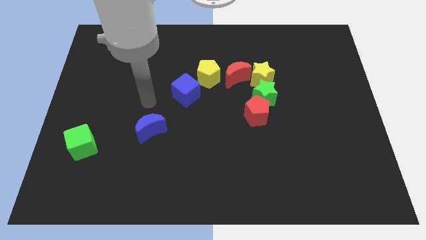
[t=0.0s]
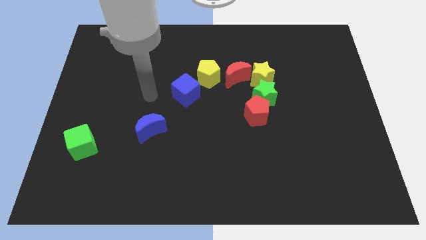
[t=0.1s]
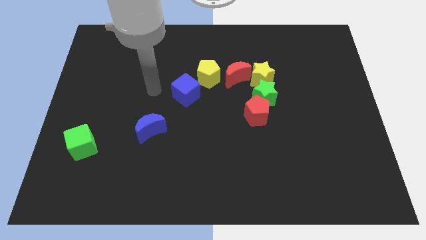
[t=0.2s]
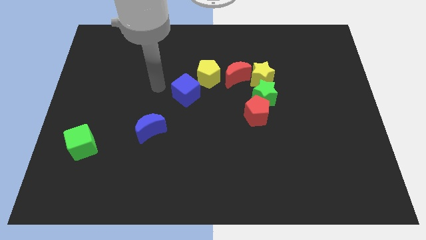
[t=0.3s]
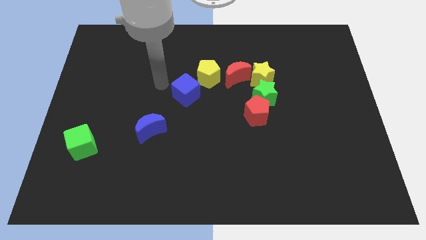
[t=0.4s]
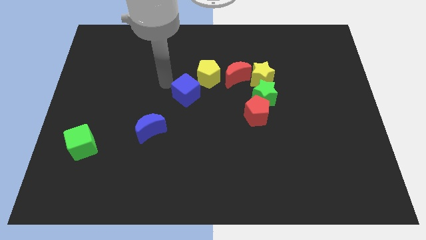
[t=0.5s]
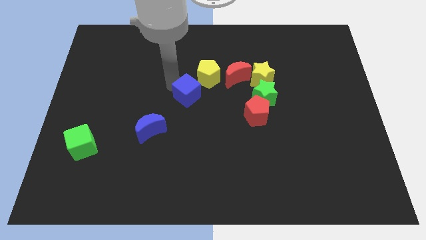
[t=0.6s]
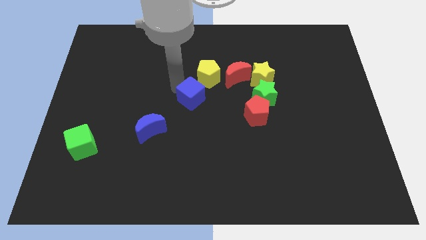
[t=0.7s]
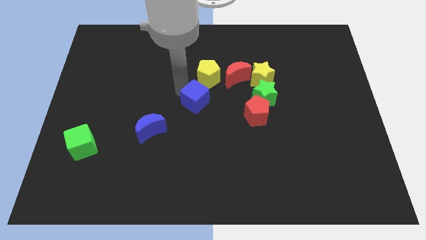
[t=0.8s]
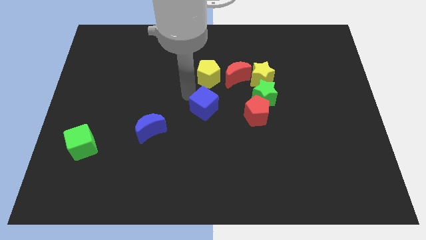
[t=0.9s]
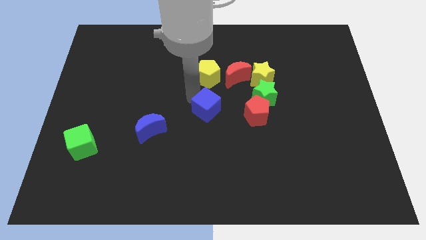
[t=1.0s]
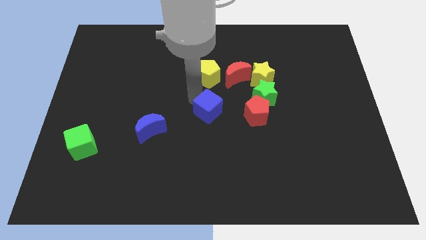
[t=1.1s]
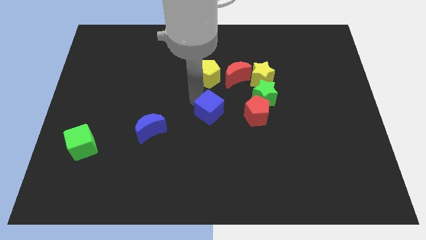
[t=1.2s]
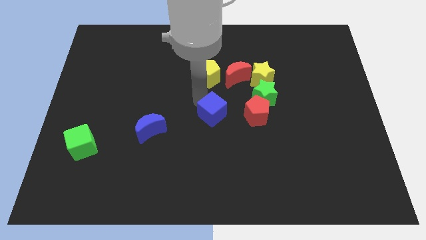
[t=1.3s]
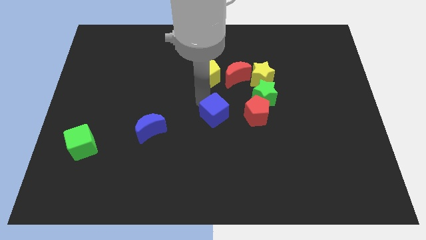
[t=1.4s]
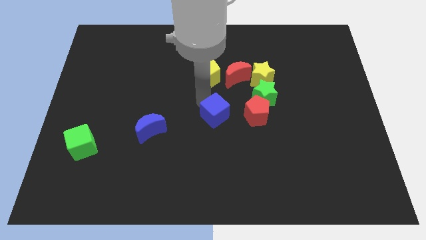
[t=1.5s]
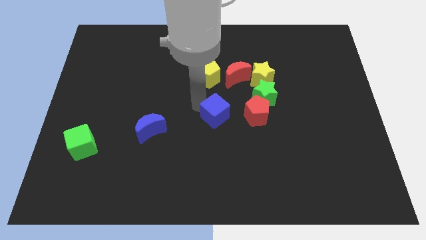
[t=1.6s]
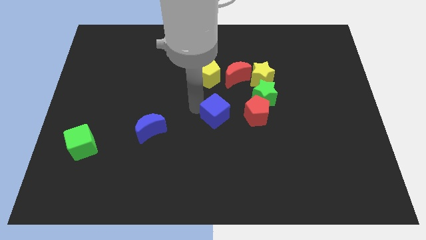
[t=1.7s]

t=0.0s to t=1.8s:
place the blue cube left to the red pentagon

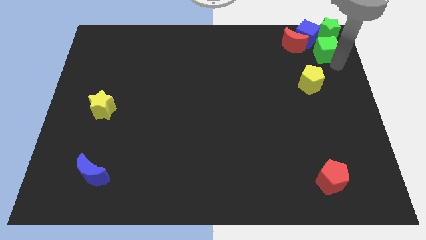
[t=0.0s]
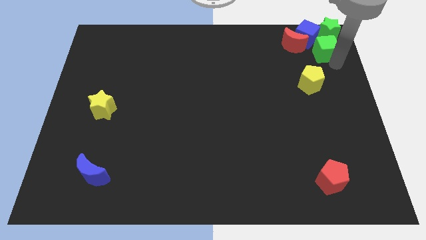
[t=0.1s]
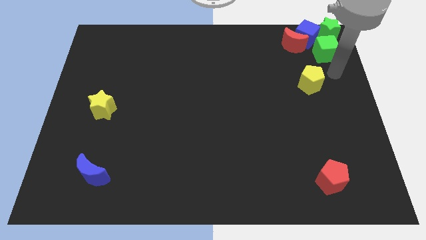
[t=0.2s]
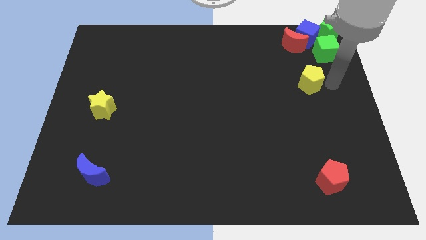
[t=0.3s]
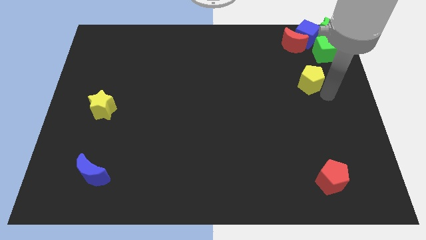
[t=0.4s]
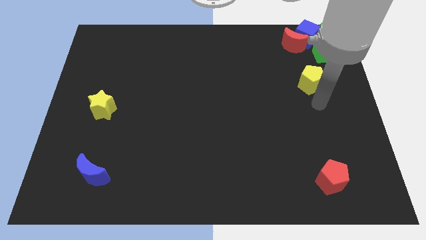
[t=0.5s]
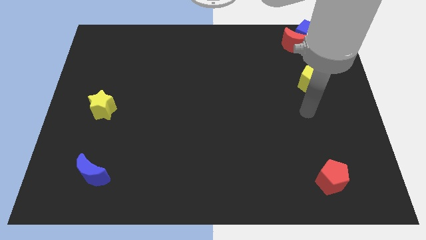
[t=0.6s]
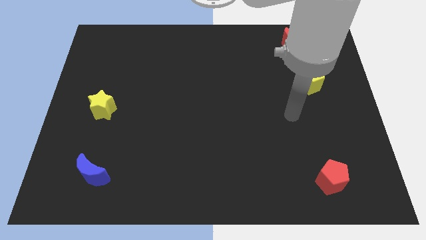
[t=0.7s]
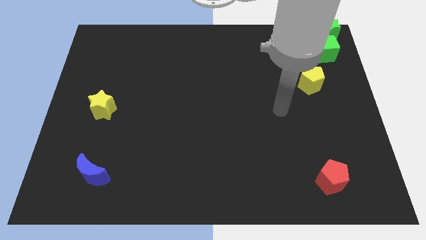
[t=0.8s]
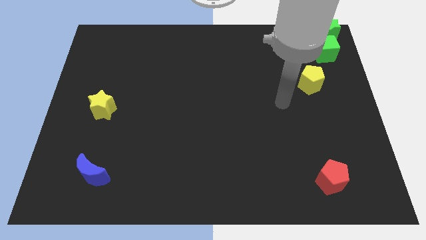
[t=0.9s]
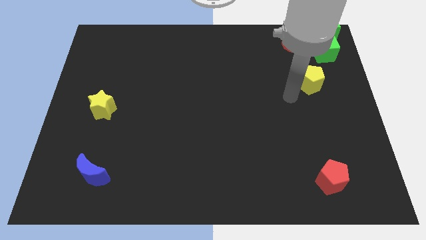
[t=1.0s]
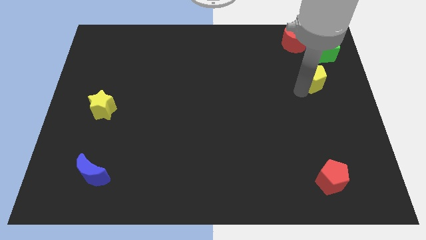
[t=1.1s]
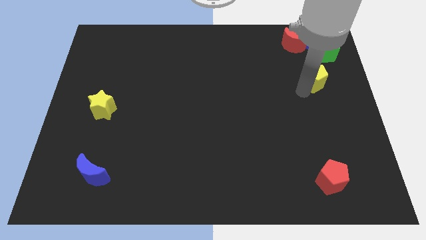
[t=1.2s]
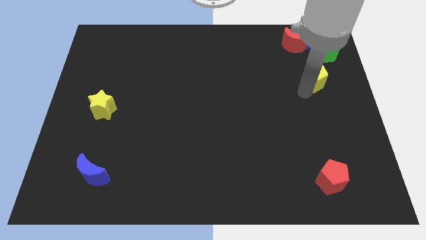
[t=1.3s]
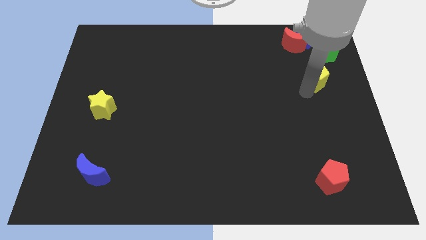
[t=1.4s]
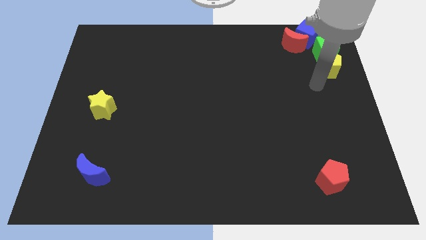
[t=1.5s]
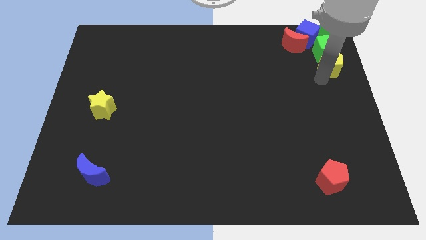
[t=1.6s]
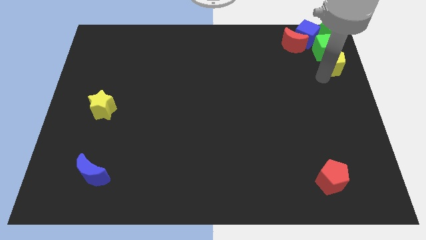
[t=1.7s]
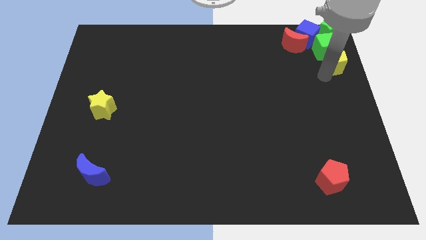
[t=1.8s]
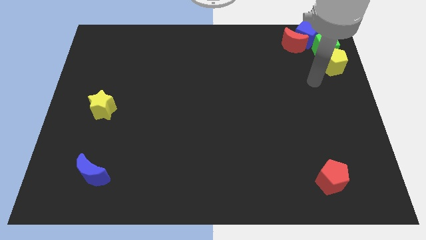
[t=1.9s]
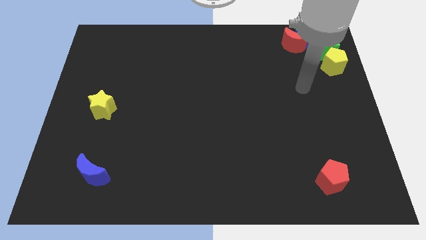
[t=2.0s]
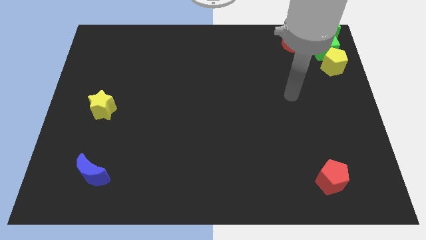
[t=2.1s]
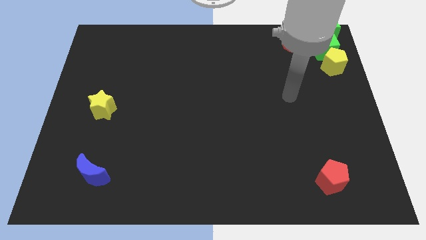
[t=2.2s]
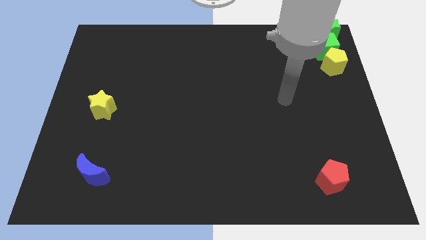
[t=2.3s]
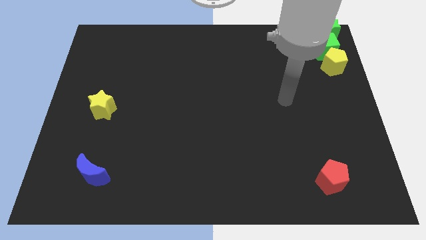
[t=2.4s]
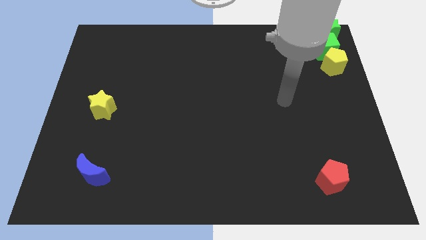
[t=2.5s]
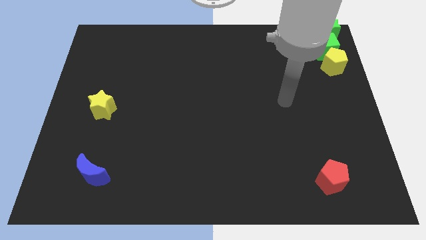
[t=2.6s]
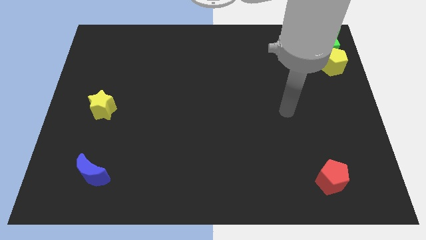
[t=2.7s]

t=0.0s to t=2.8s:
place yellow pentagon below green cube

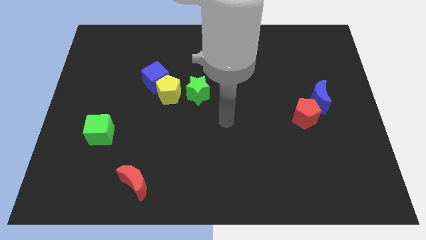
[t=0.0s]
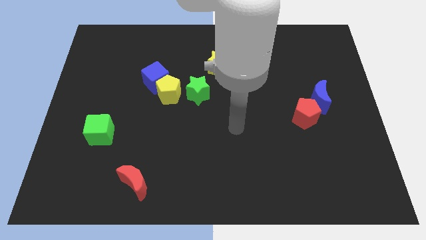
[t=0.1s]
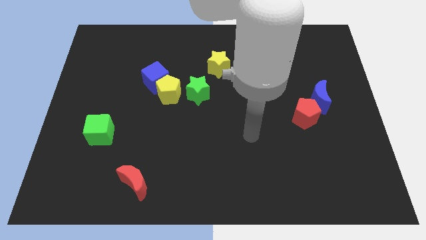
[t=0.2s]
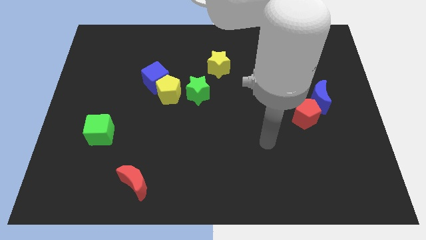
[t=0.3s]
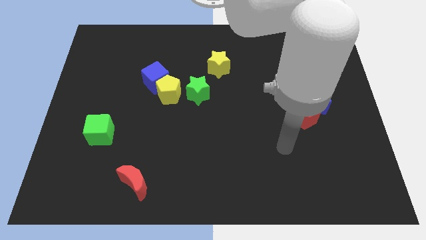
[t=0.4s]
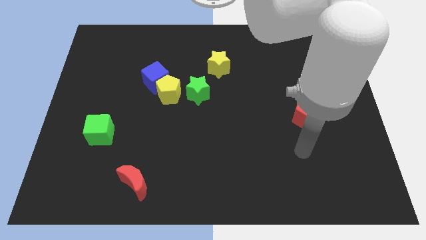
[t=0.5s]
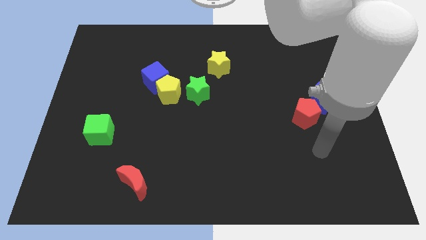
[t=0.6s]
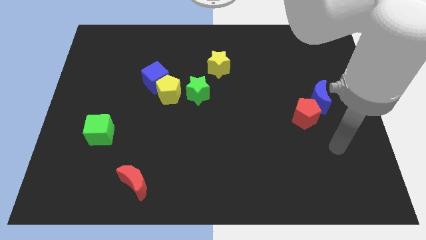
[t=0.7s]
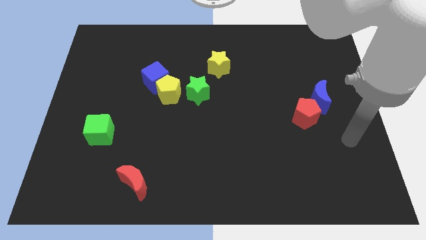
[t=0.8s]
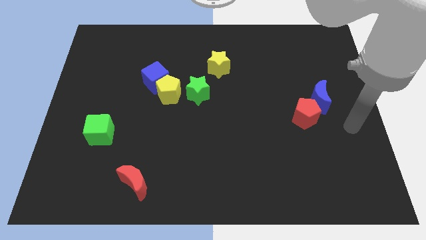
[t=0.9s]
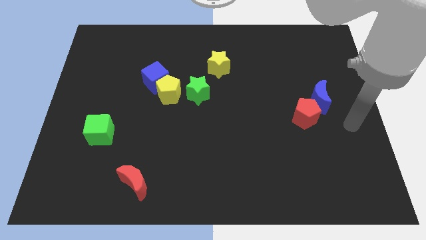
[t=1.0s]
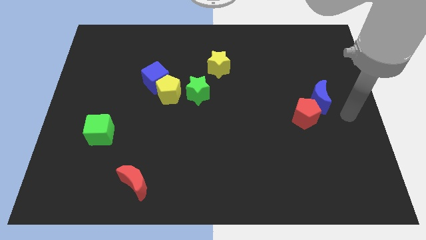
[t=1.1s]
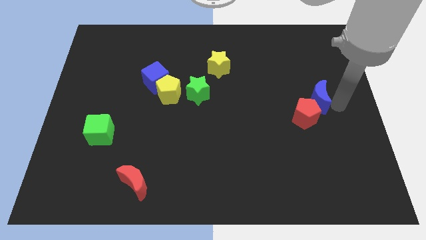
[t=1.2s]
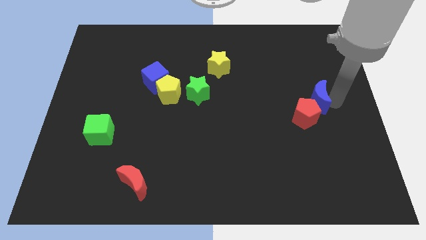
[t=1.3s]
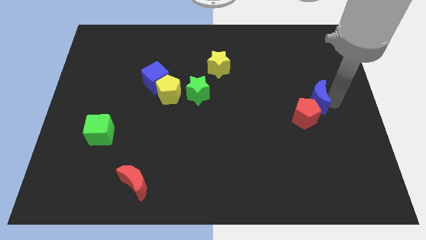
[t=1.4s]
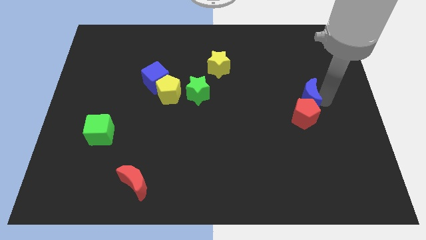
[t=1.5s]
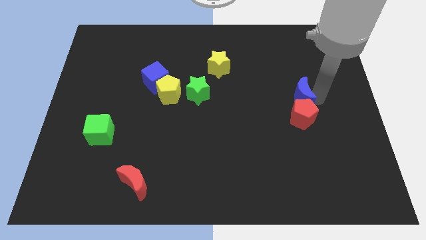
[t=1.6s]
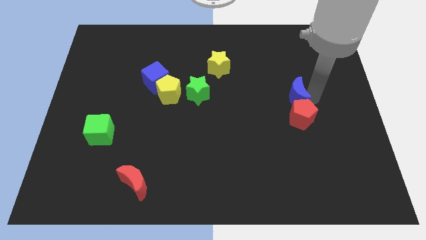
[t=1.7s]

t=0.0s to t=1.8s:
move your arm to the right side of the blue crescent

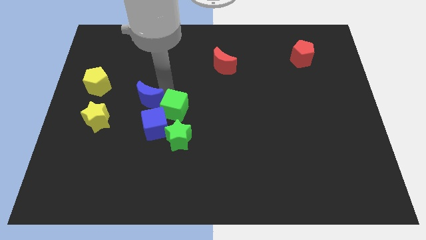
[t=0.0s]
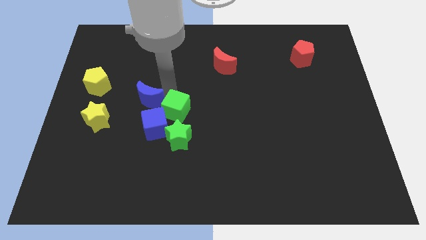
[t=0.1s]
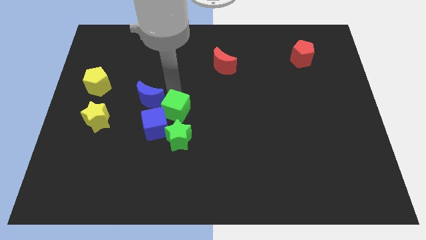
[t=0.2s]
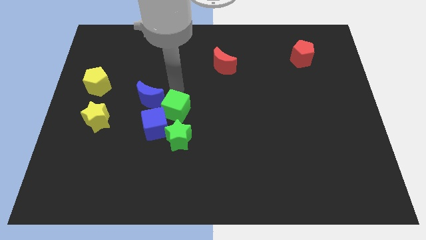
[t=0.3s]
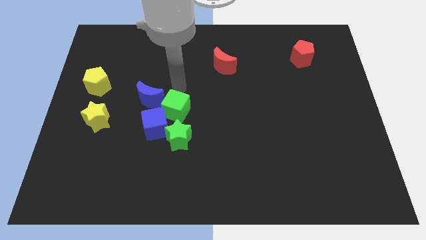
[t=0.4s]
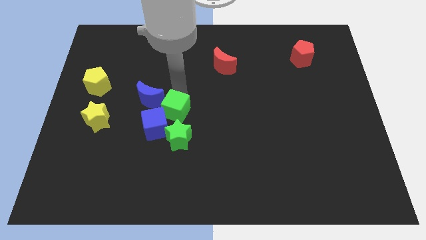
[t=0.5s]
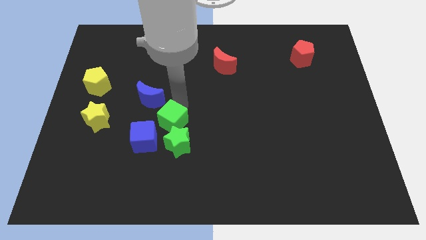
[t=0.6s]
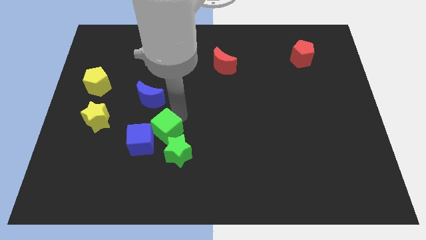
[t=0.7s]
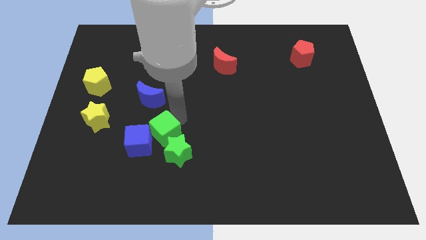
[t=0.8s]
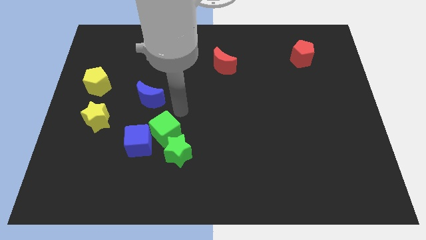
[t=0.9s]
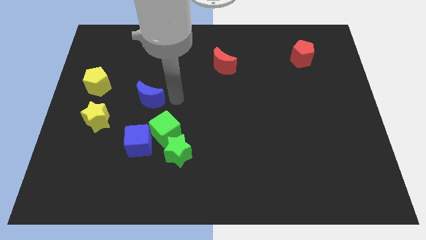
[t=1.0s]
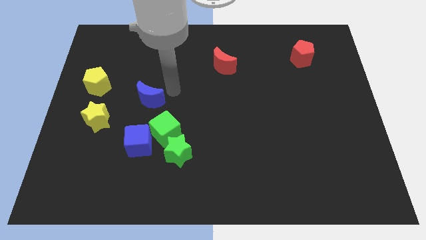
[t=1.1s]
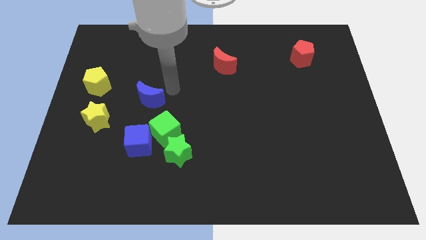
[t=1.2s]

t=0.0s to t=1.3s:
move green blocks slightly down

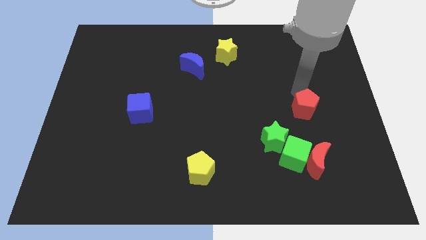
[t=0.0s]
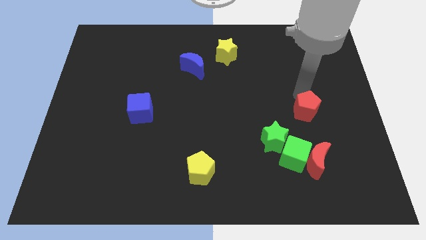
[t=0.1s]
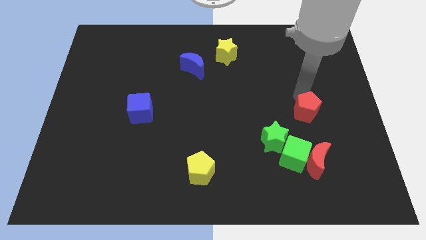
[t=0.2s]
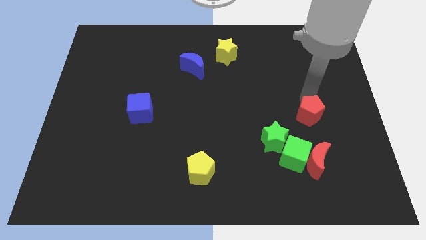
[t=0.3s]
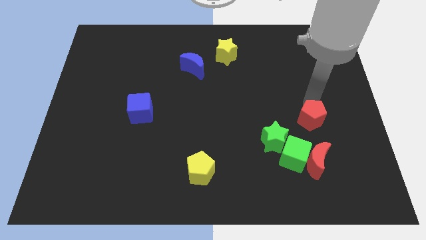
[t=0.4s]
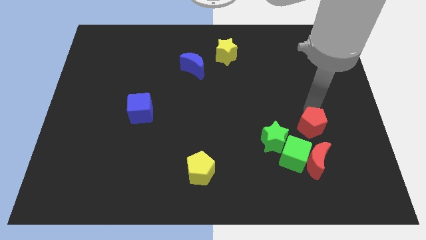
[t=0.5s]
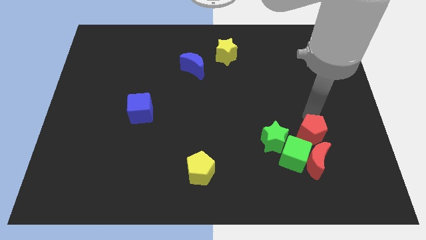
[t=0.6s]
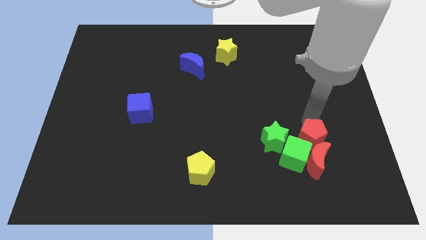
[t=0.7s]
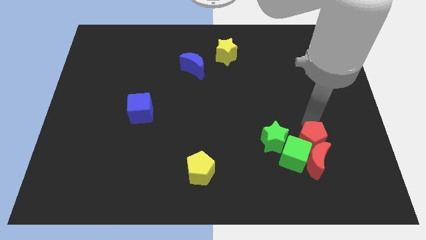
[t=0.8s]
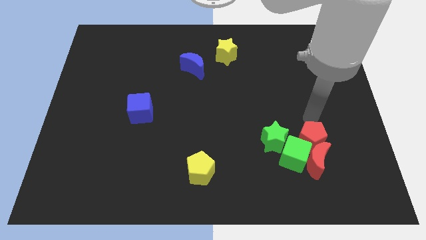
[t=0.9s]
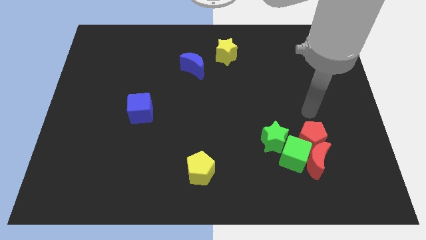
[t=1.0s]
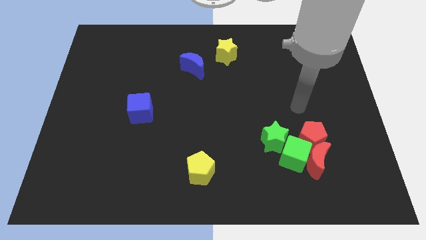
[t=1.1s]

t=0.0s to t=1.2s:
put the red pentagon between green cube and red moon

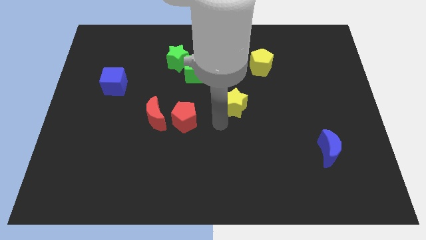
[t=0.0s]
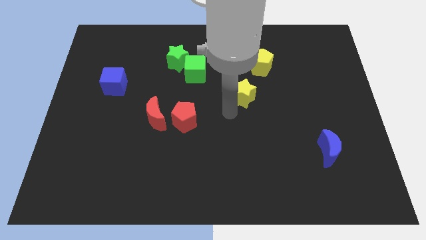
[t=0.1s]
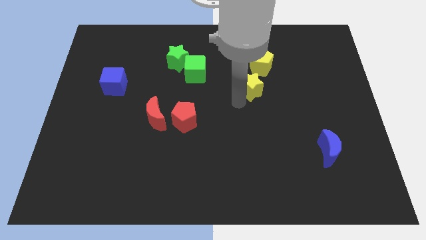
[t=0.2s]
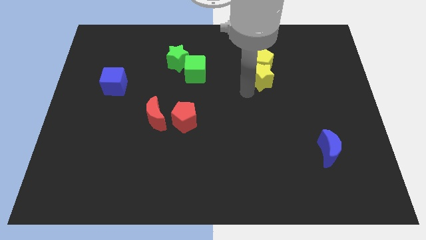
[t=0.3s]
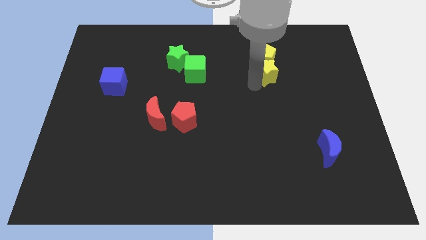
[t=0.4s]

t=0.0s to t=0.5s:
attach the yellow star to the yellow pentagon
